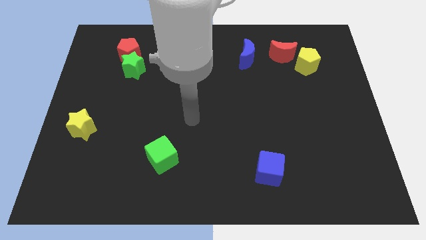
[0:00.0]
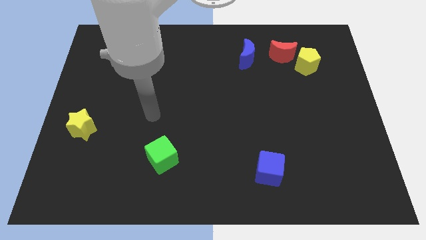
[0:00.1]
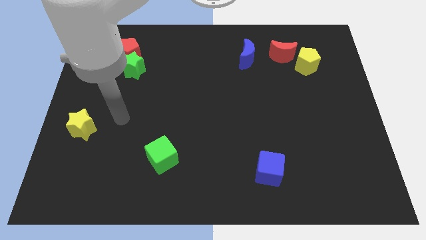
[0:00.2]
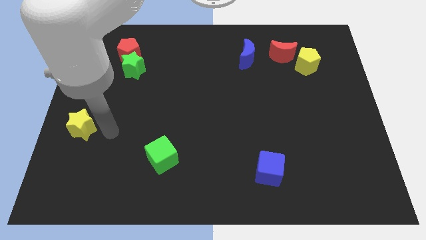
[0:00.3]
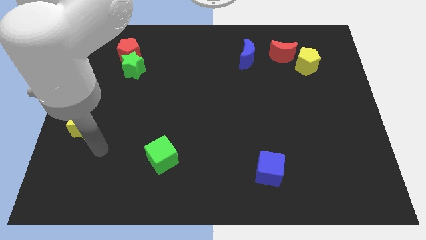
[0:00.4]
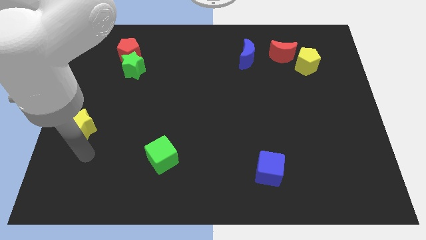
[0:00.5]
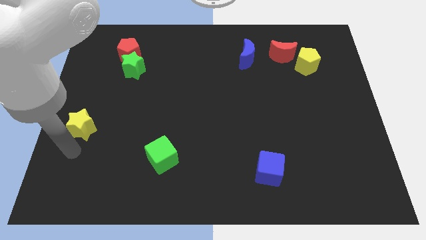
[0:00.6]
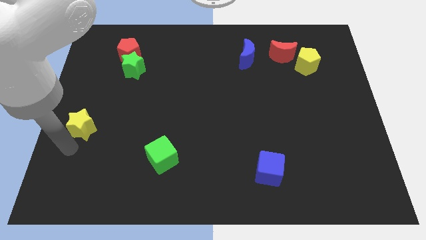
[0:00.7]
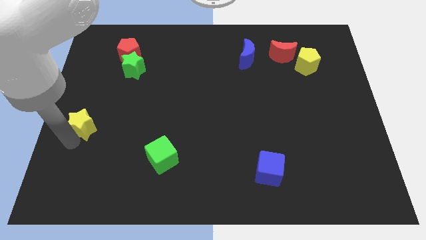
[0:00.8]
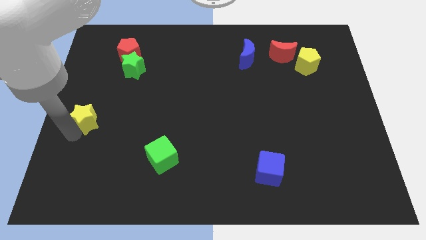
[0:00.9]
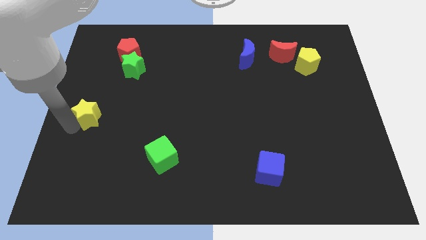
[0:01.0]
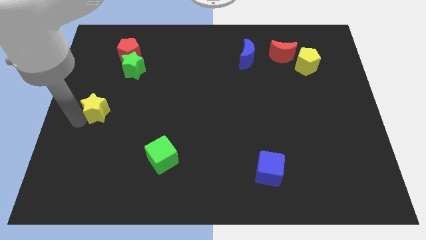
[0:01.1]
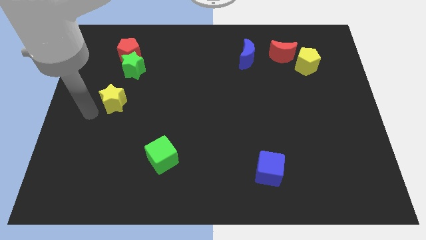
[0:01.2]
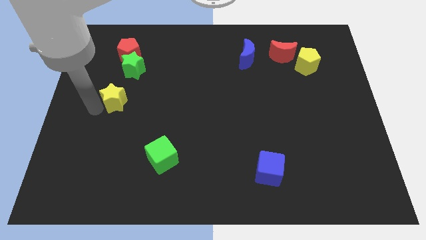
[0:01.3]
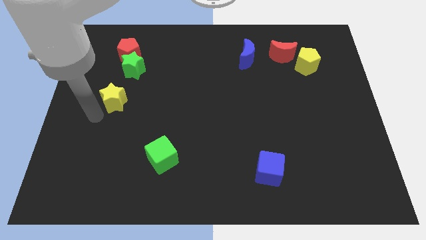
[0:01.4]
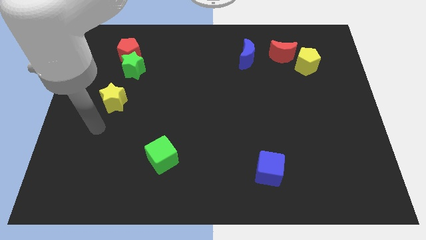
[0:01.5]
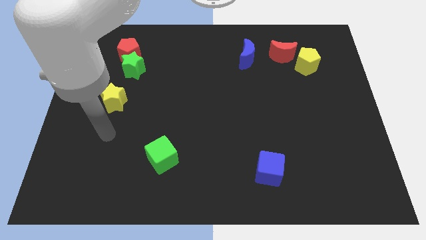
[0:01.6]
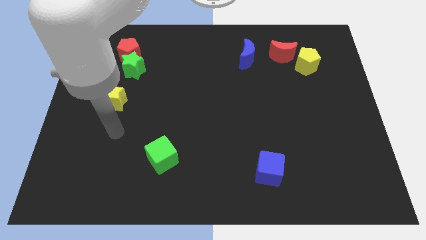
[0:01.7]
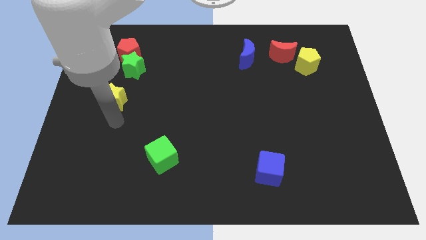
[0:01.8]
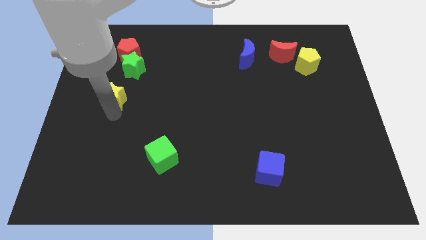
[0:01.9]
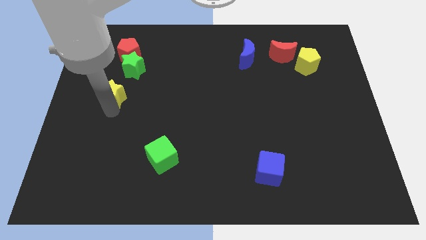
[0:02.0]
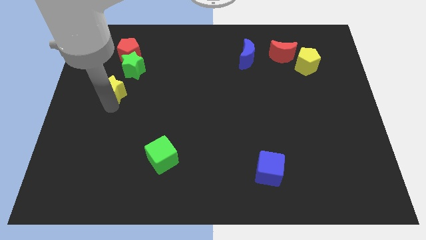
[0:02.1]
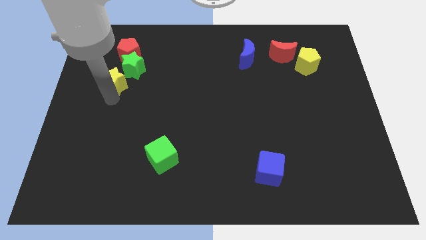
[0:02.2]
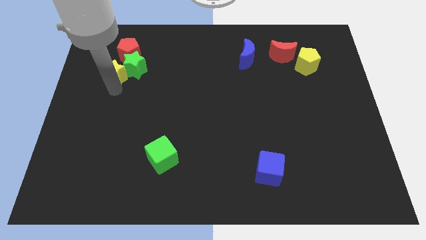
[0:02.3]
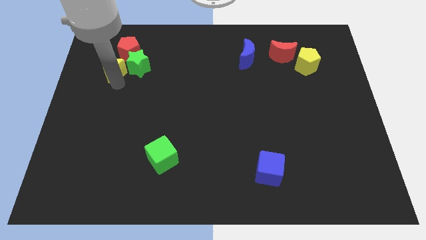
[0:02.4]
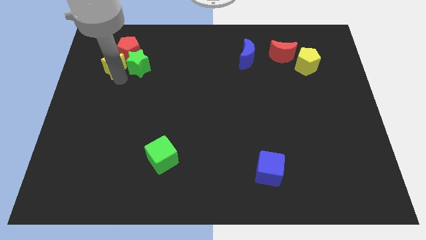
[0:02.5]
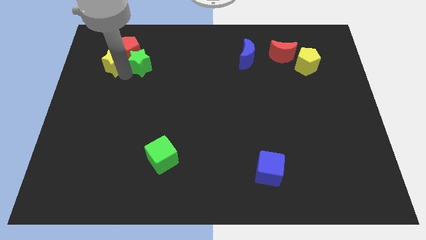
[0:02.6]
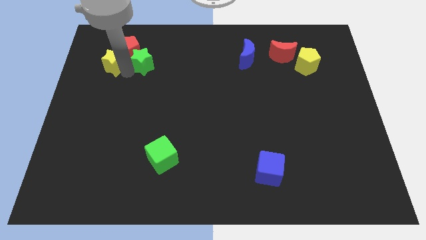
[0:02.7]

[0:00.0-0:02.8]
slide the yellow star close to the red pentagon

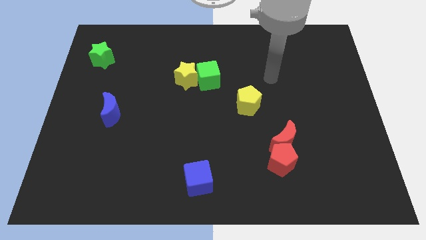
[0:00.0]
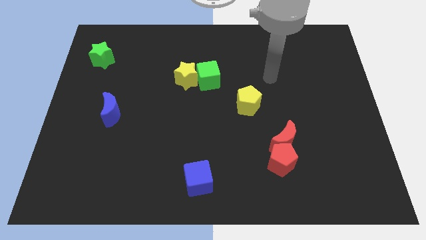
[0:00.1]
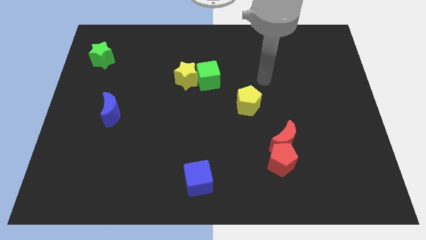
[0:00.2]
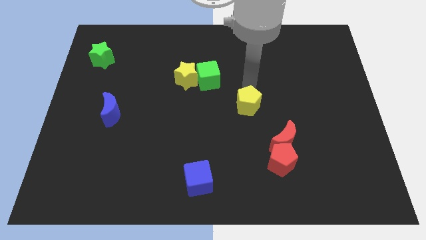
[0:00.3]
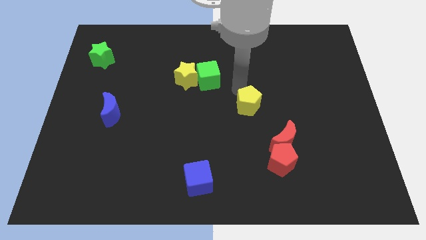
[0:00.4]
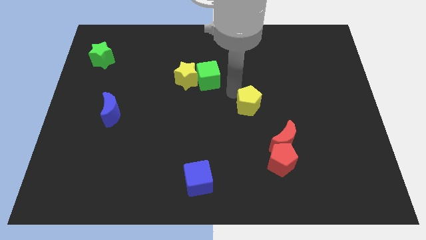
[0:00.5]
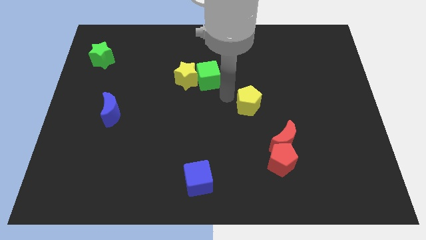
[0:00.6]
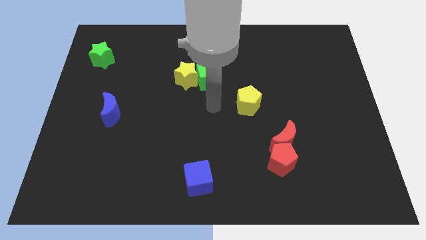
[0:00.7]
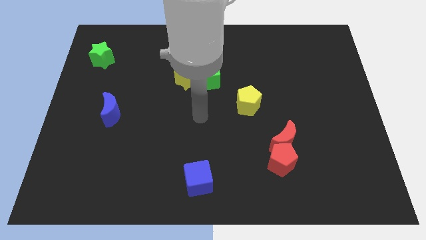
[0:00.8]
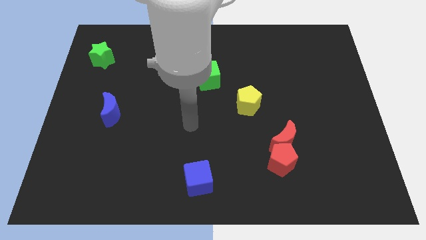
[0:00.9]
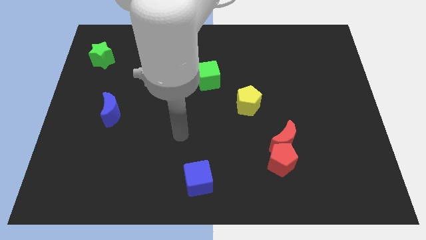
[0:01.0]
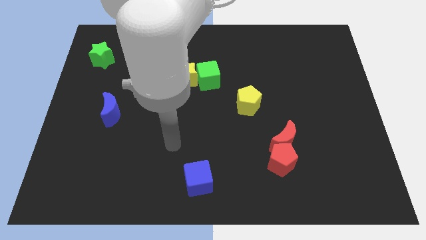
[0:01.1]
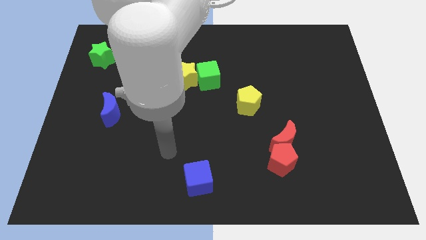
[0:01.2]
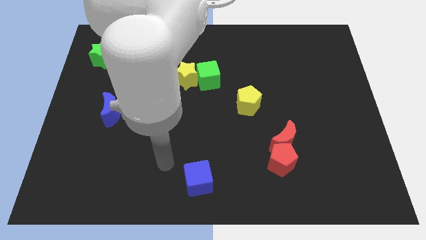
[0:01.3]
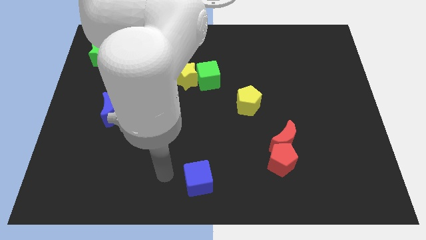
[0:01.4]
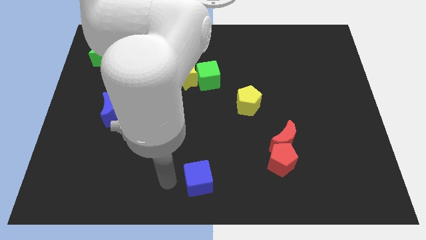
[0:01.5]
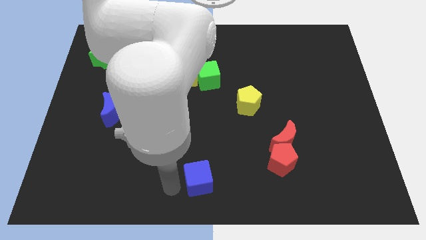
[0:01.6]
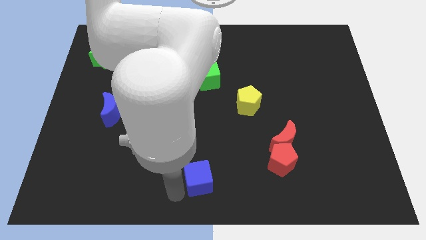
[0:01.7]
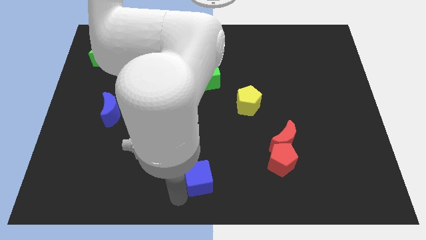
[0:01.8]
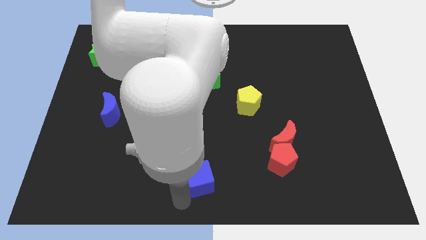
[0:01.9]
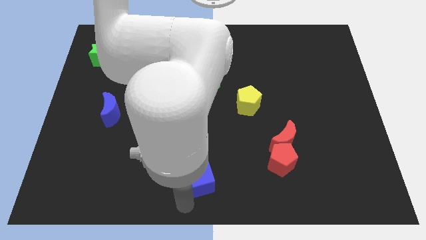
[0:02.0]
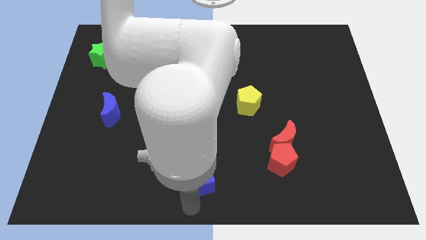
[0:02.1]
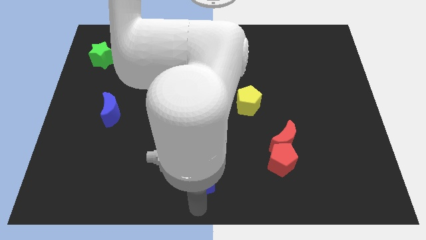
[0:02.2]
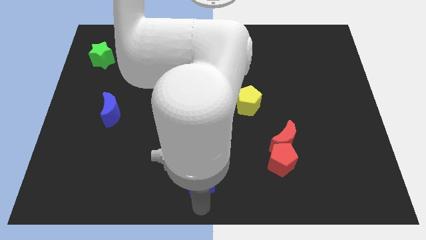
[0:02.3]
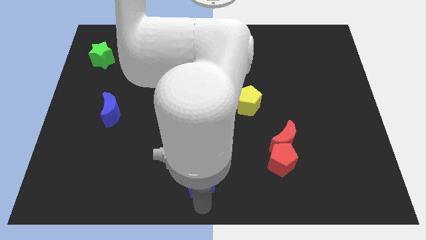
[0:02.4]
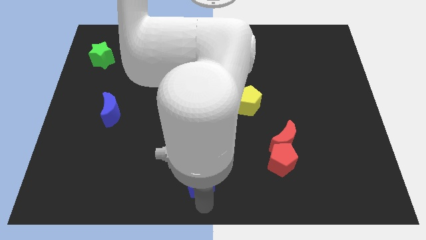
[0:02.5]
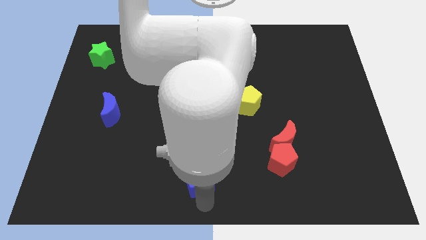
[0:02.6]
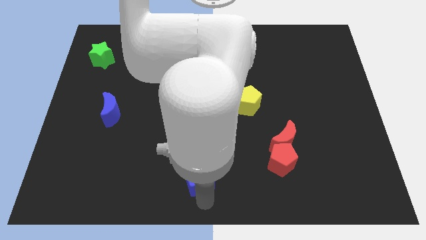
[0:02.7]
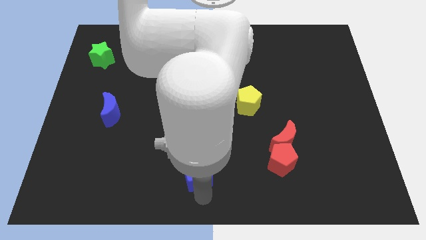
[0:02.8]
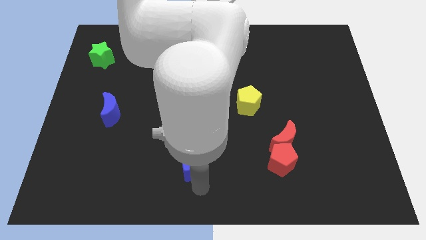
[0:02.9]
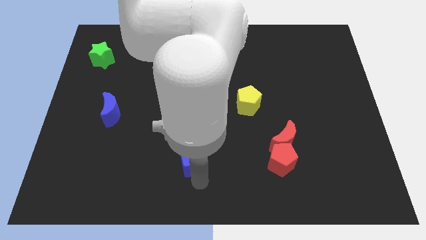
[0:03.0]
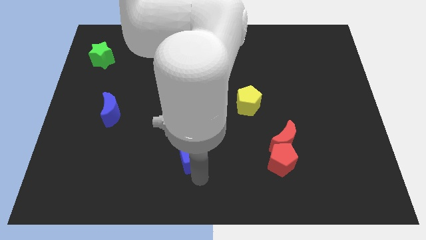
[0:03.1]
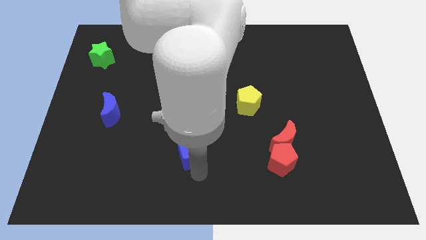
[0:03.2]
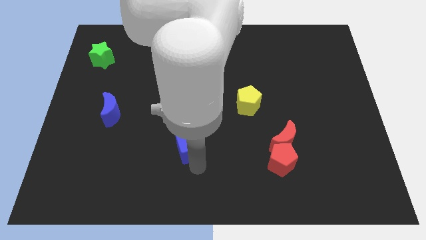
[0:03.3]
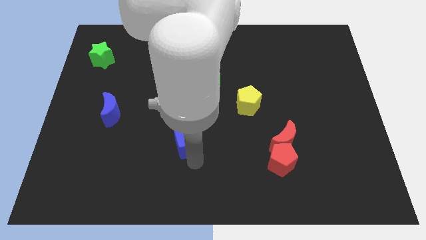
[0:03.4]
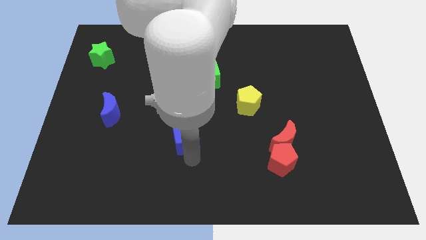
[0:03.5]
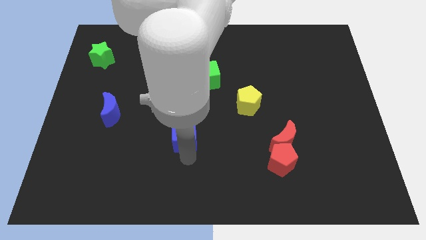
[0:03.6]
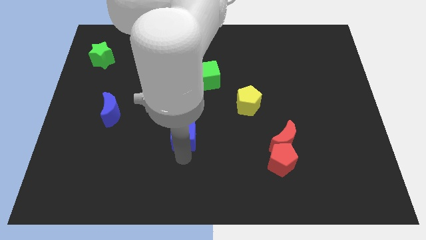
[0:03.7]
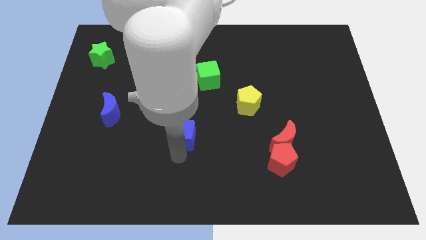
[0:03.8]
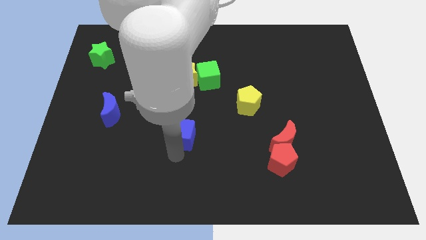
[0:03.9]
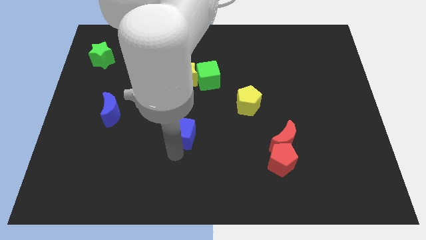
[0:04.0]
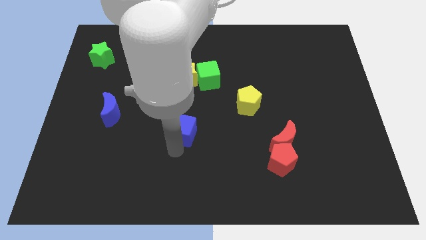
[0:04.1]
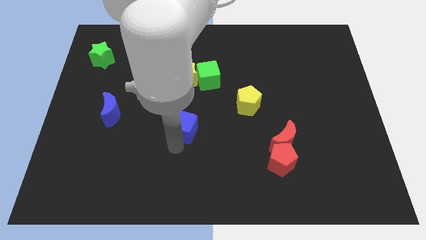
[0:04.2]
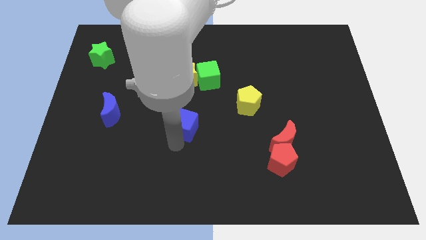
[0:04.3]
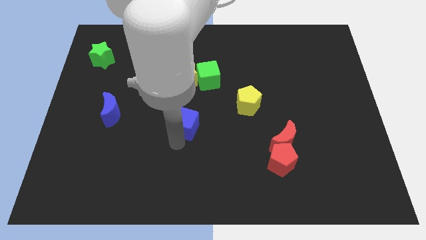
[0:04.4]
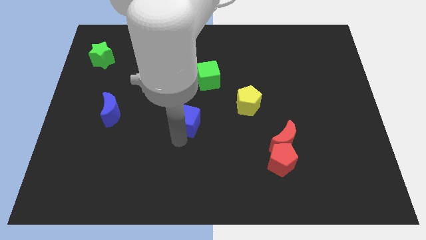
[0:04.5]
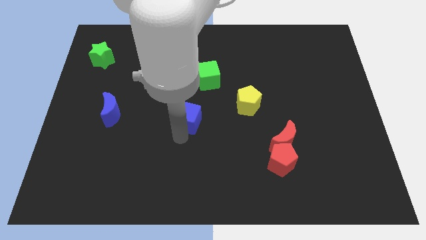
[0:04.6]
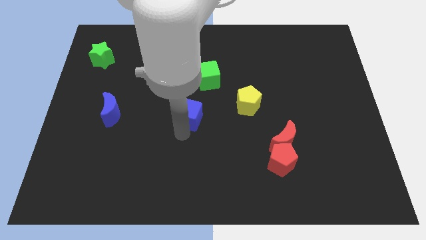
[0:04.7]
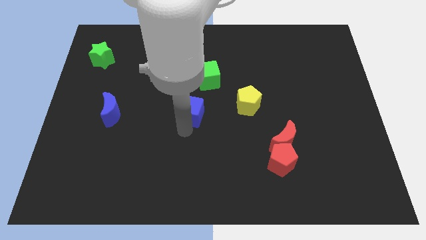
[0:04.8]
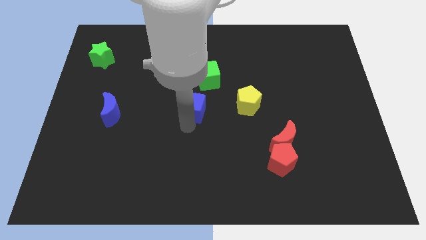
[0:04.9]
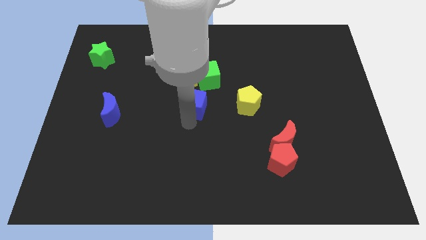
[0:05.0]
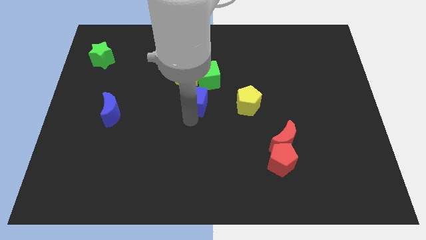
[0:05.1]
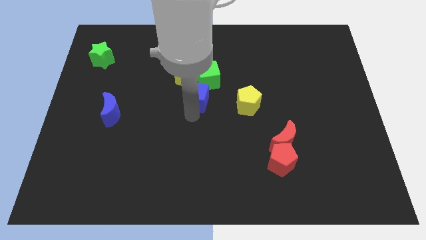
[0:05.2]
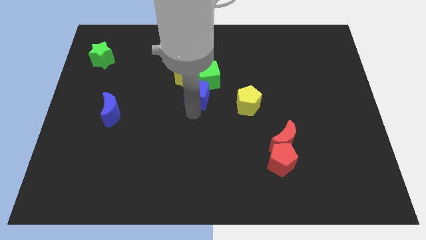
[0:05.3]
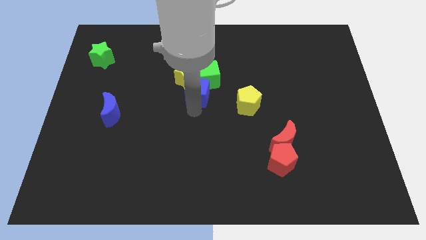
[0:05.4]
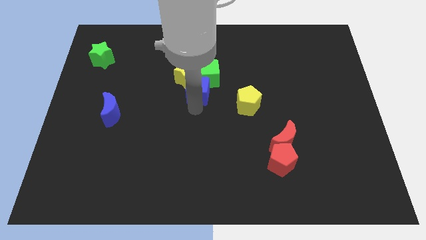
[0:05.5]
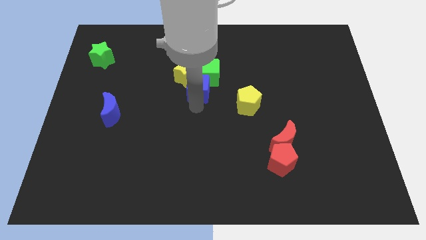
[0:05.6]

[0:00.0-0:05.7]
slide the blue cube close to the green cube

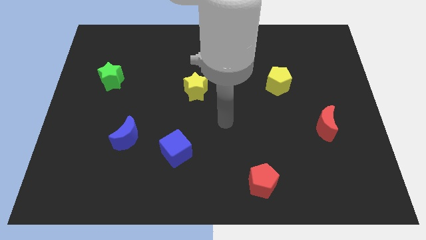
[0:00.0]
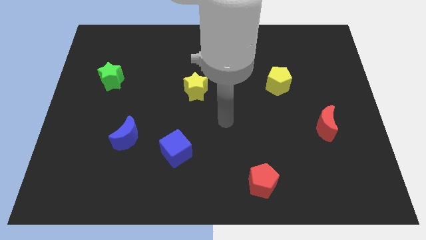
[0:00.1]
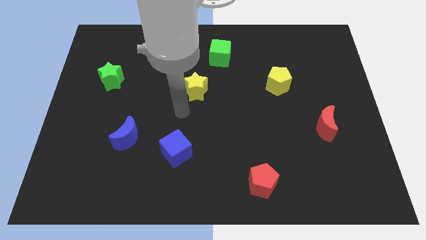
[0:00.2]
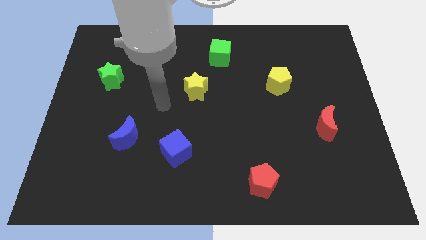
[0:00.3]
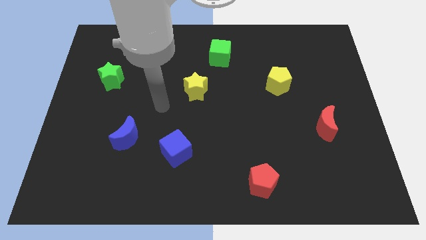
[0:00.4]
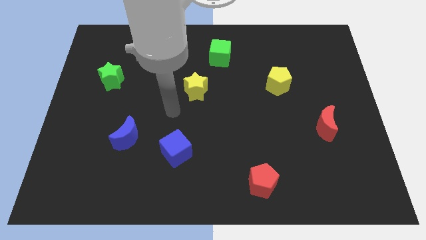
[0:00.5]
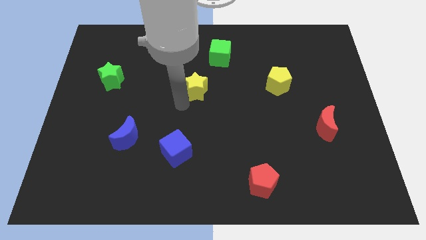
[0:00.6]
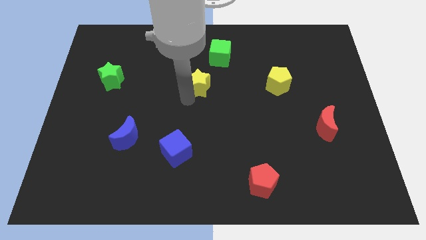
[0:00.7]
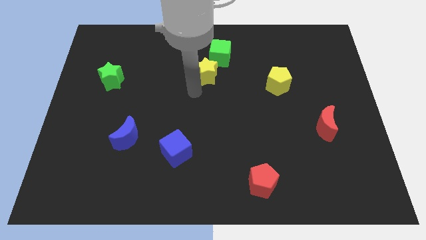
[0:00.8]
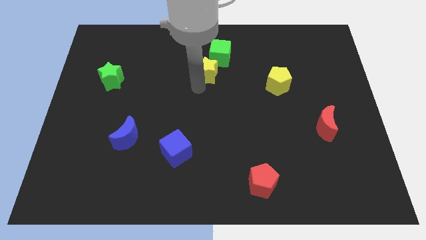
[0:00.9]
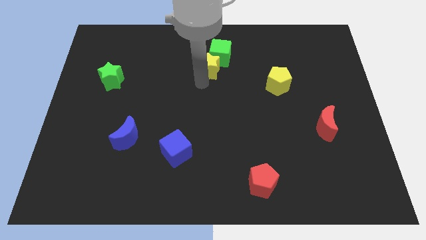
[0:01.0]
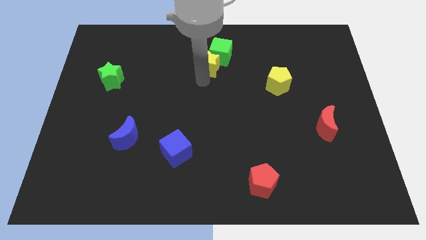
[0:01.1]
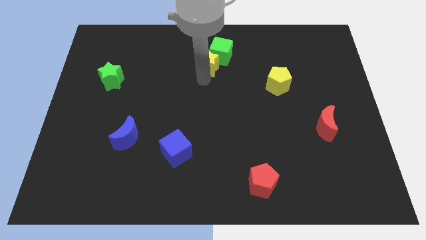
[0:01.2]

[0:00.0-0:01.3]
put the yellow star to the green cube
